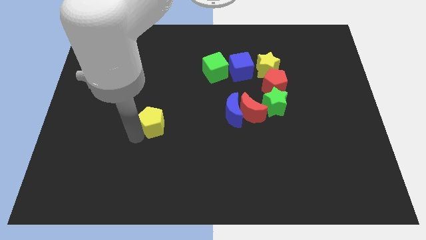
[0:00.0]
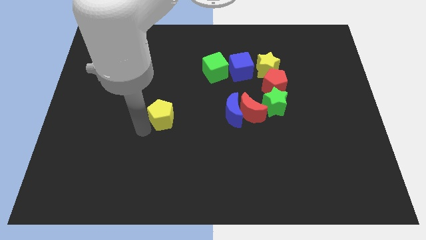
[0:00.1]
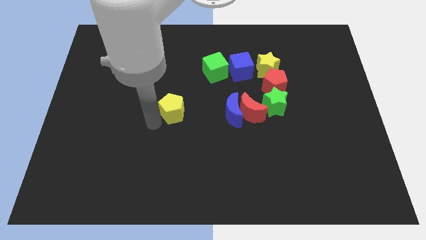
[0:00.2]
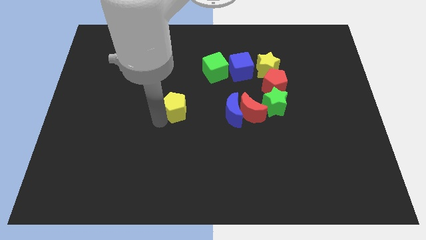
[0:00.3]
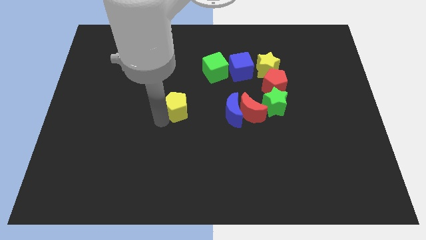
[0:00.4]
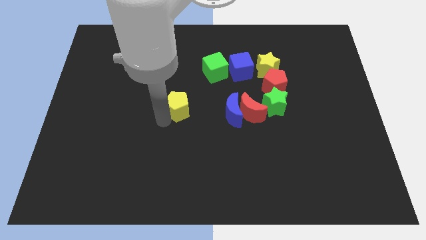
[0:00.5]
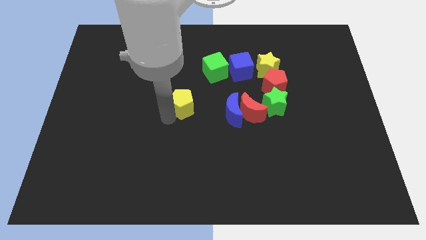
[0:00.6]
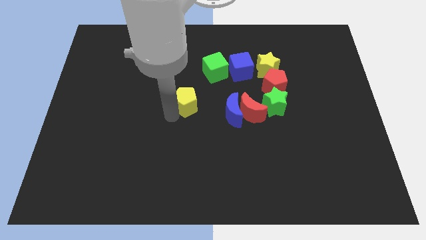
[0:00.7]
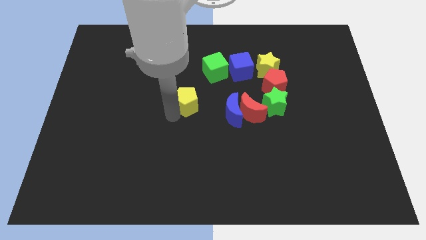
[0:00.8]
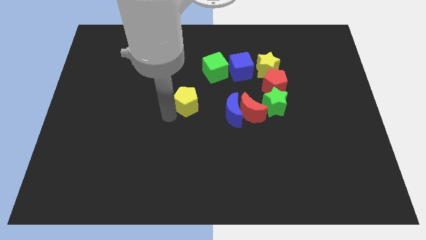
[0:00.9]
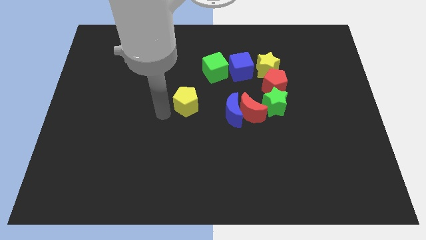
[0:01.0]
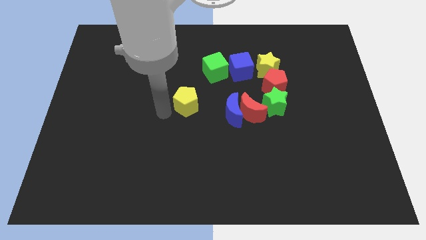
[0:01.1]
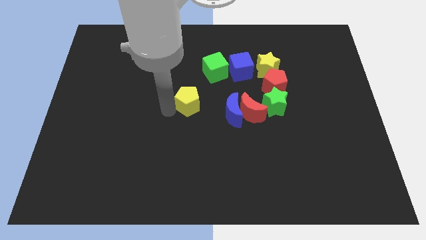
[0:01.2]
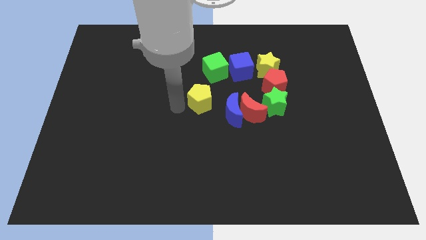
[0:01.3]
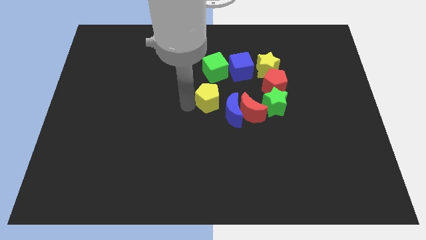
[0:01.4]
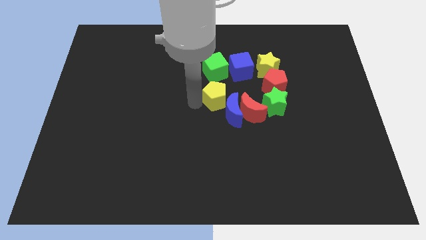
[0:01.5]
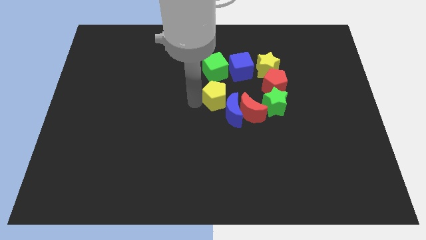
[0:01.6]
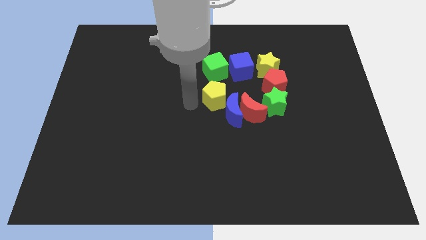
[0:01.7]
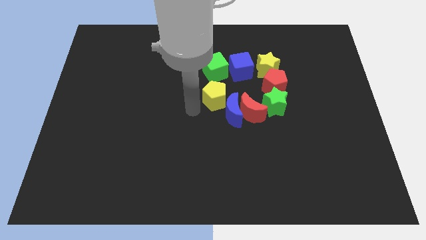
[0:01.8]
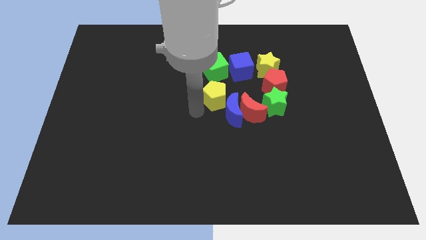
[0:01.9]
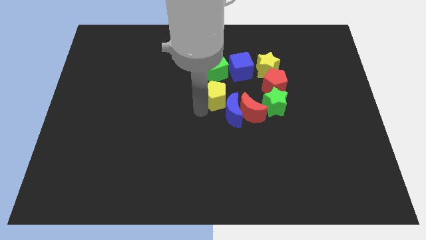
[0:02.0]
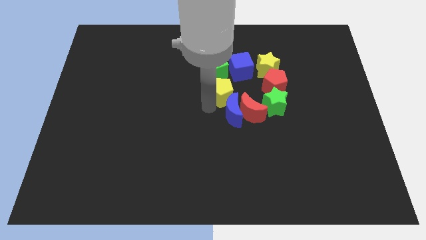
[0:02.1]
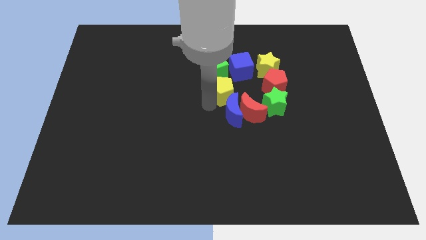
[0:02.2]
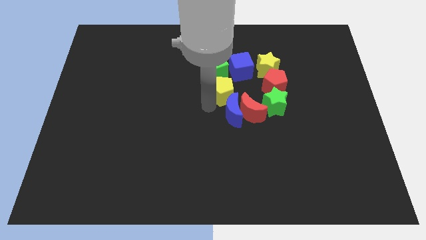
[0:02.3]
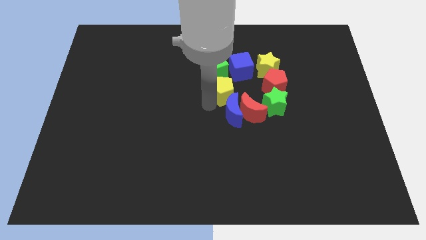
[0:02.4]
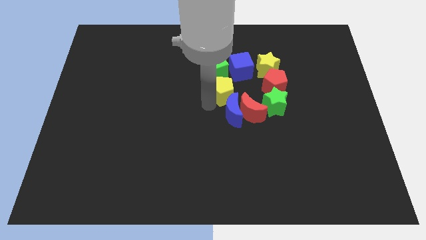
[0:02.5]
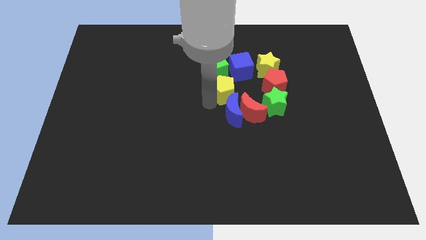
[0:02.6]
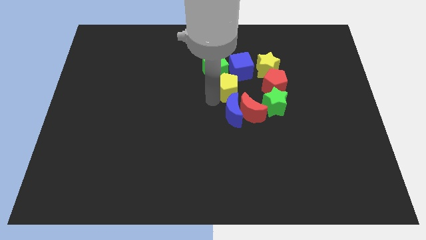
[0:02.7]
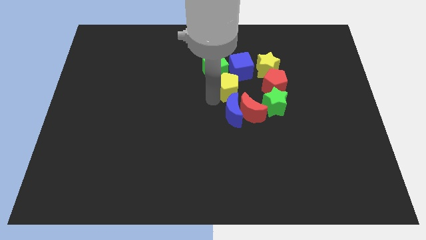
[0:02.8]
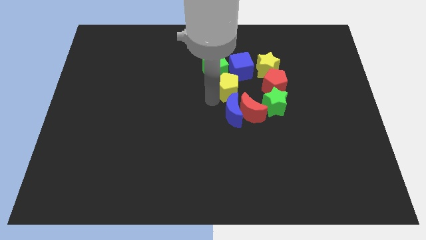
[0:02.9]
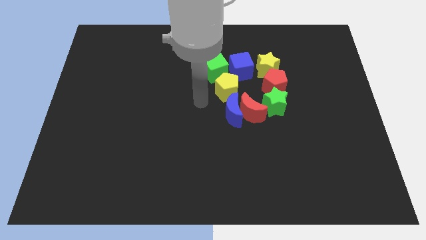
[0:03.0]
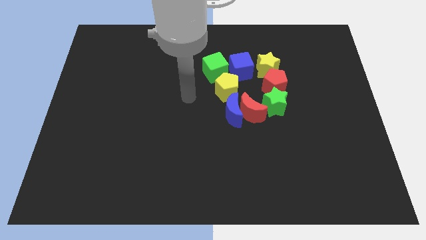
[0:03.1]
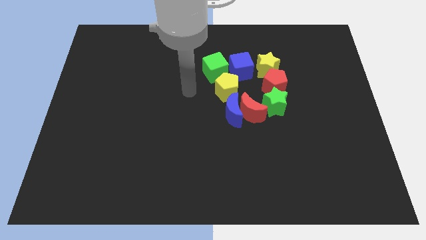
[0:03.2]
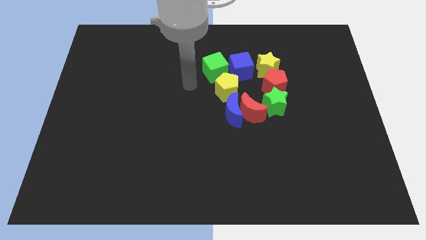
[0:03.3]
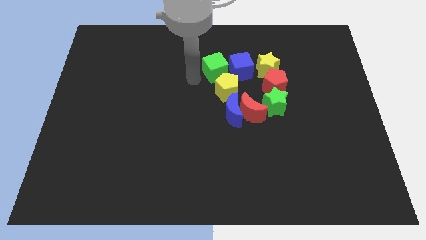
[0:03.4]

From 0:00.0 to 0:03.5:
push the yellow pentagon to the top of blue crescent

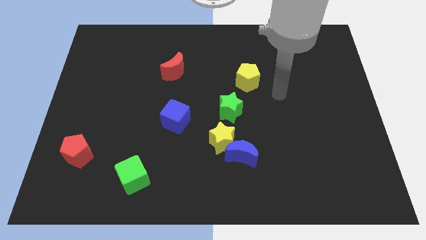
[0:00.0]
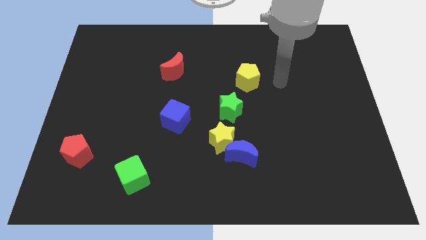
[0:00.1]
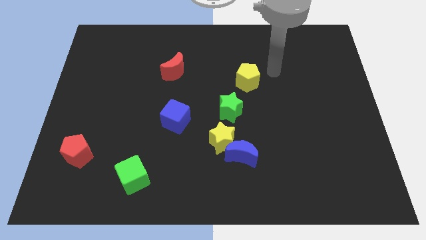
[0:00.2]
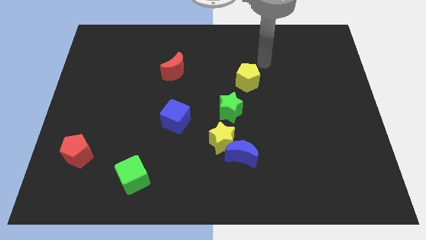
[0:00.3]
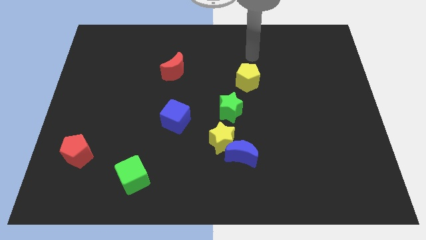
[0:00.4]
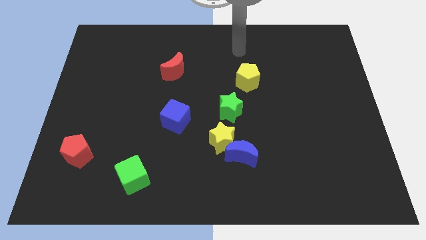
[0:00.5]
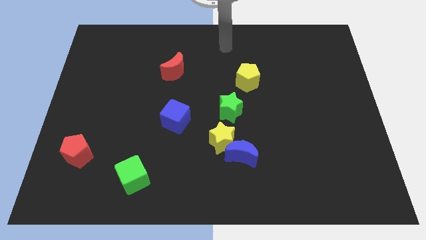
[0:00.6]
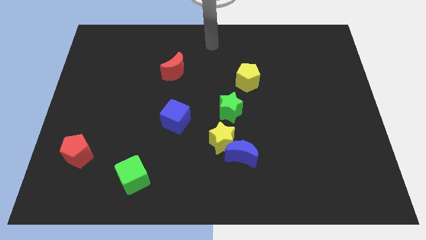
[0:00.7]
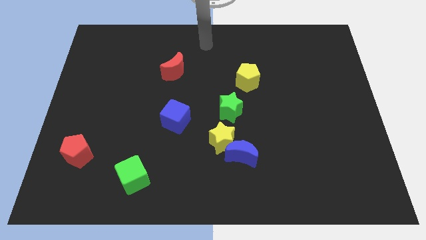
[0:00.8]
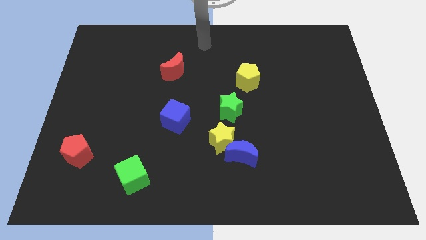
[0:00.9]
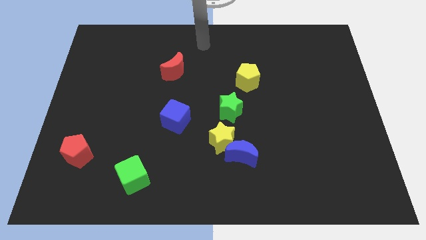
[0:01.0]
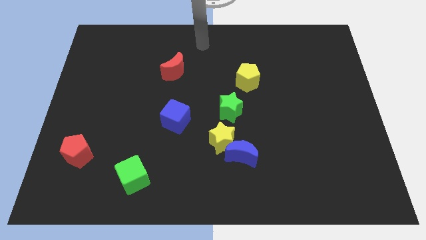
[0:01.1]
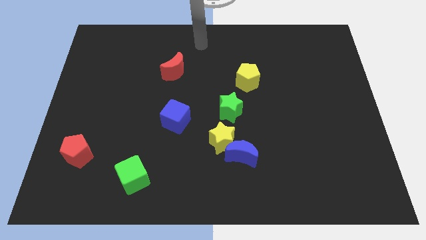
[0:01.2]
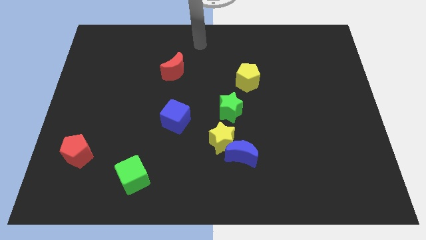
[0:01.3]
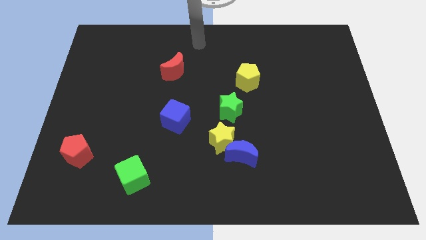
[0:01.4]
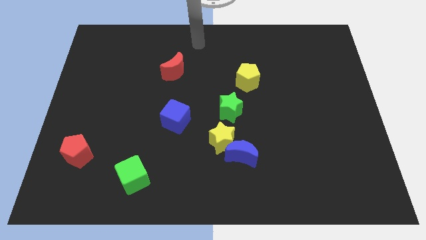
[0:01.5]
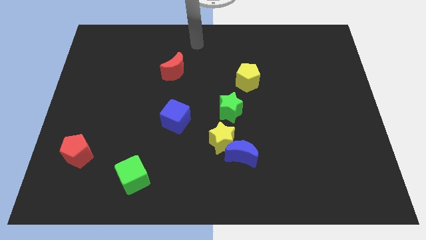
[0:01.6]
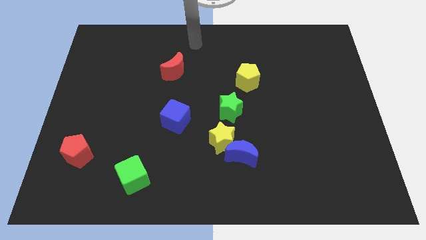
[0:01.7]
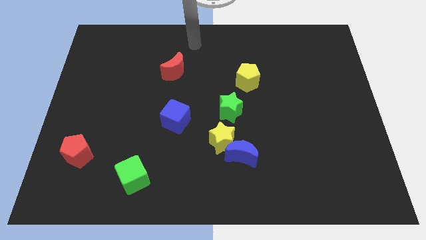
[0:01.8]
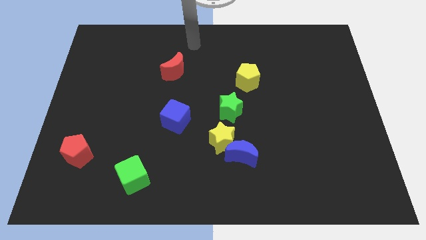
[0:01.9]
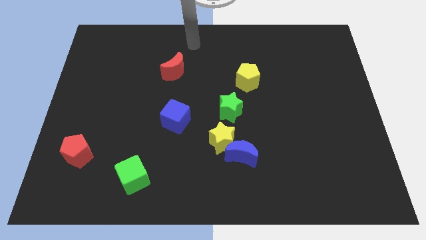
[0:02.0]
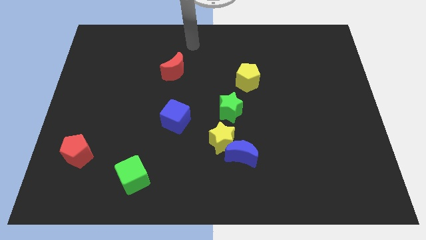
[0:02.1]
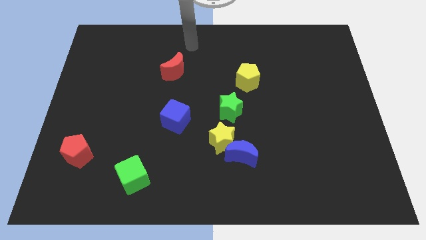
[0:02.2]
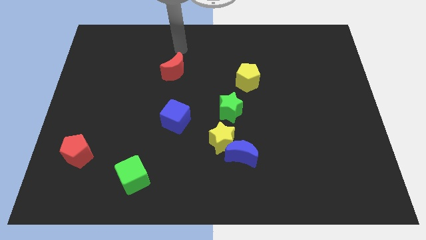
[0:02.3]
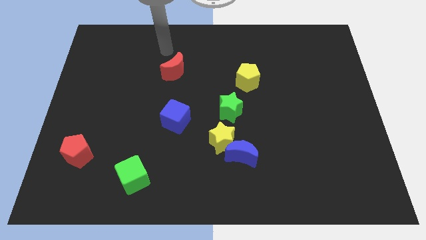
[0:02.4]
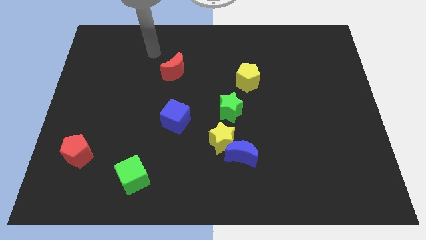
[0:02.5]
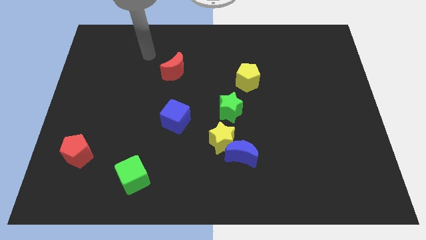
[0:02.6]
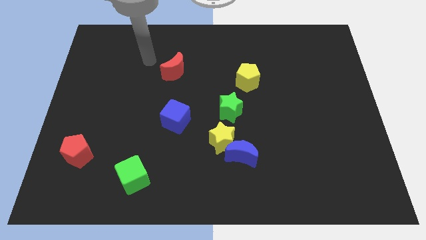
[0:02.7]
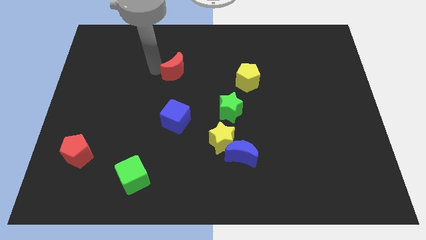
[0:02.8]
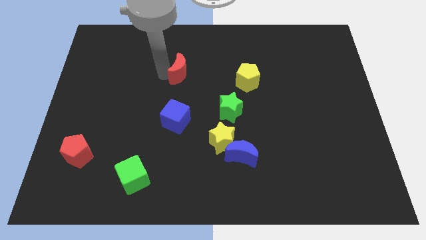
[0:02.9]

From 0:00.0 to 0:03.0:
move red moon slightly right

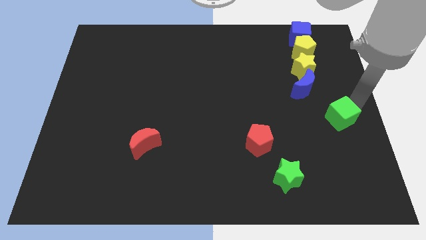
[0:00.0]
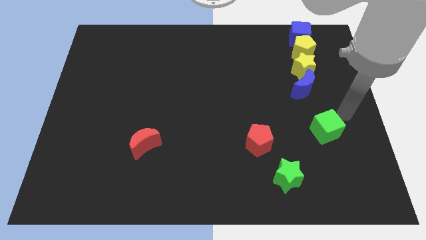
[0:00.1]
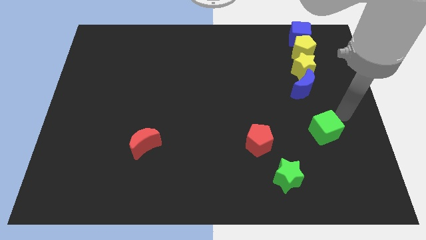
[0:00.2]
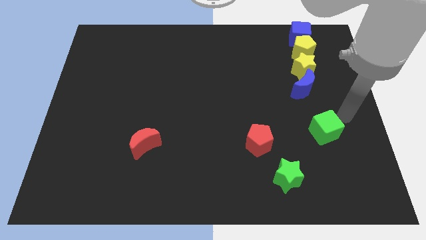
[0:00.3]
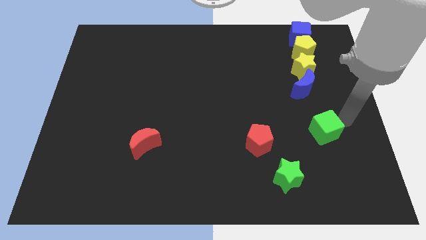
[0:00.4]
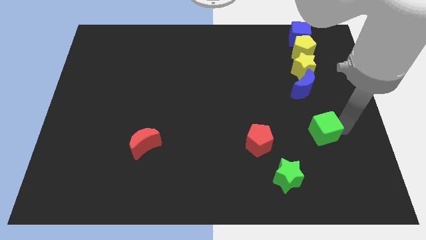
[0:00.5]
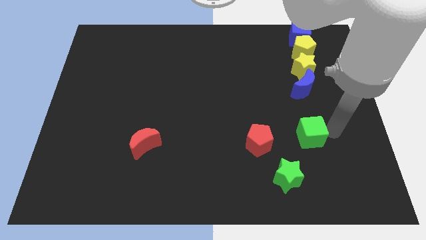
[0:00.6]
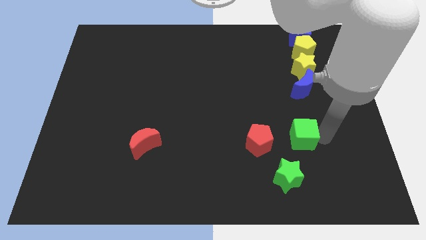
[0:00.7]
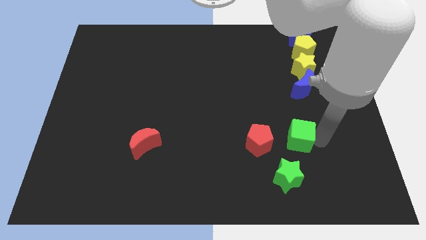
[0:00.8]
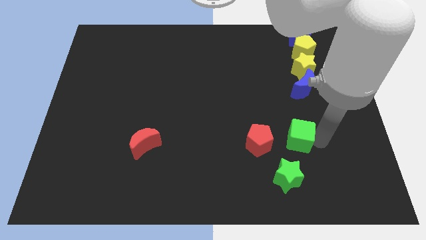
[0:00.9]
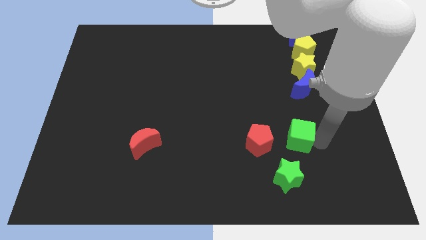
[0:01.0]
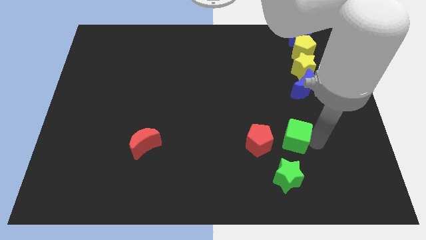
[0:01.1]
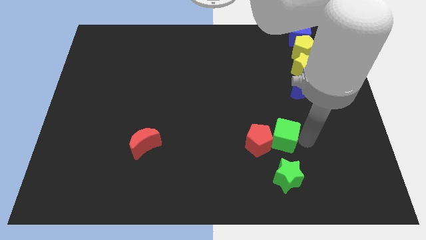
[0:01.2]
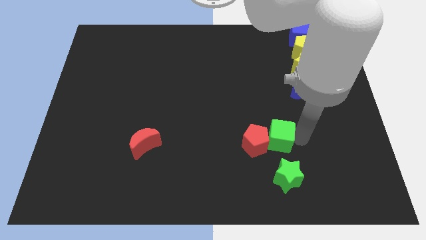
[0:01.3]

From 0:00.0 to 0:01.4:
push the green cube to the right of the red pentagon

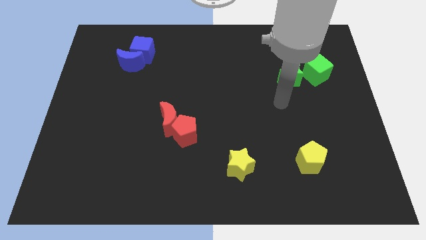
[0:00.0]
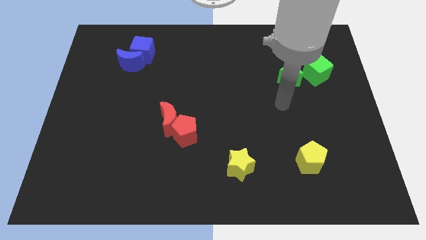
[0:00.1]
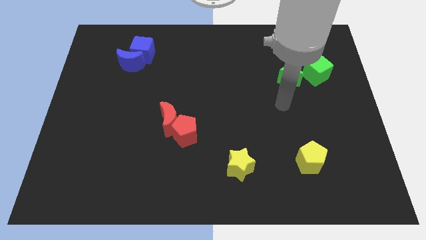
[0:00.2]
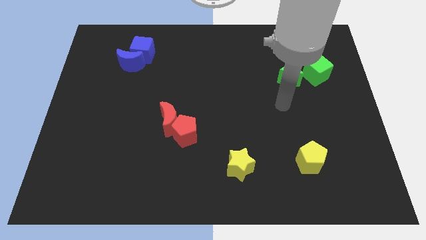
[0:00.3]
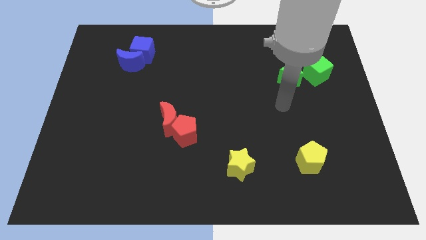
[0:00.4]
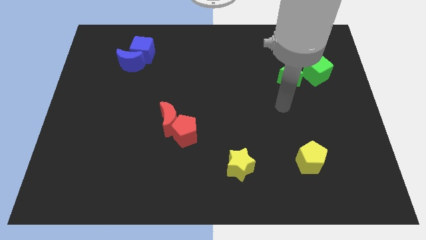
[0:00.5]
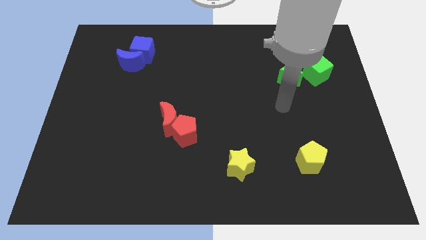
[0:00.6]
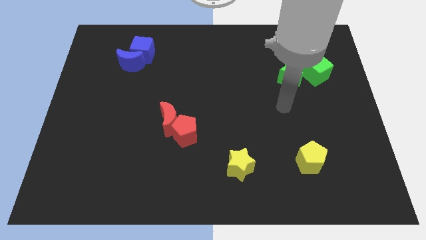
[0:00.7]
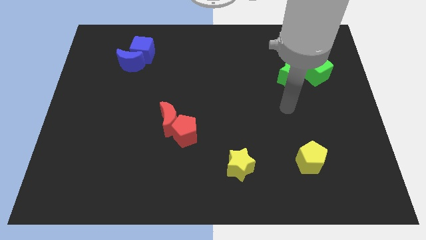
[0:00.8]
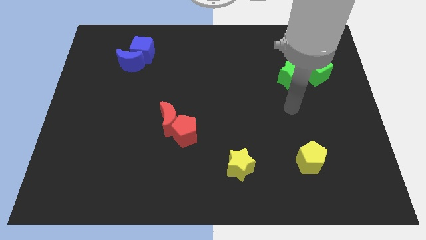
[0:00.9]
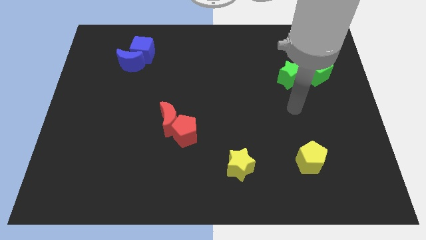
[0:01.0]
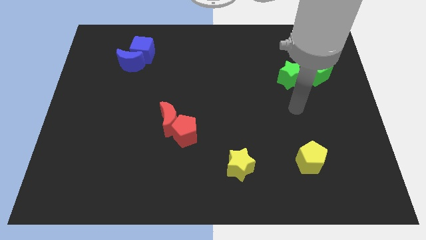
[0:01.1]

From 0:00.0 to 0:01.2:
slightly move your arm to the right of center of the board
